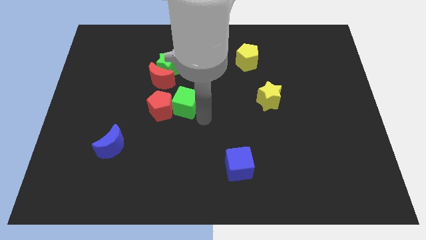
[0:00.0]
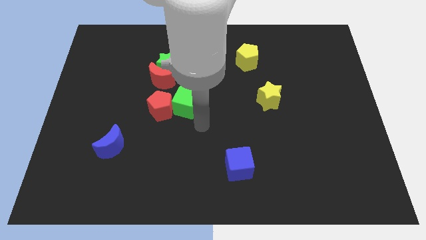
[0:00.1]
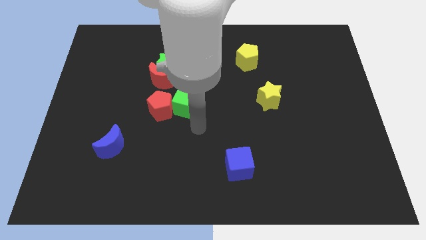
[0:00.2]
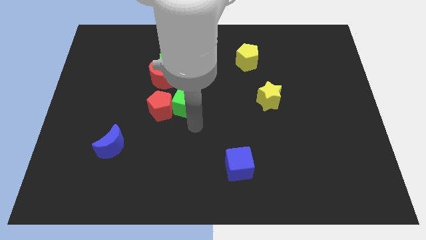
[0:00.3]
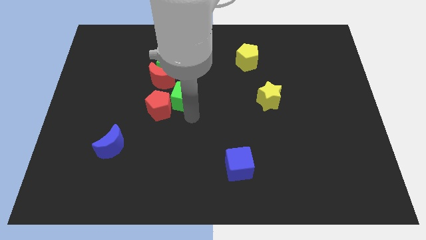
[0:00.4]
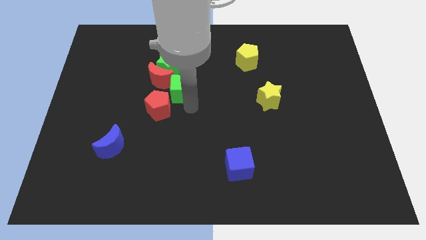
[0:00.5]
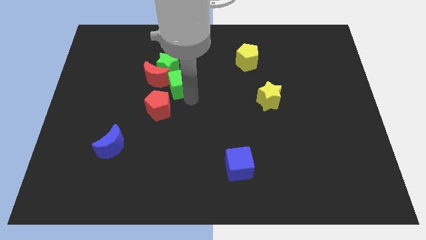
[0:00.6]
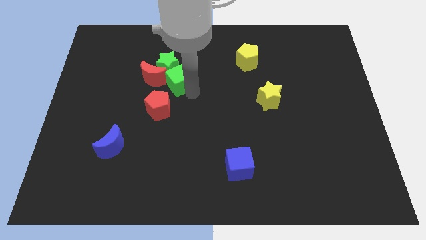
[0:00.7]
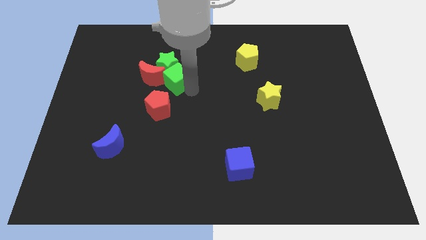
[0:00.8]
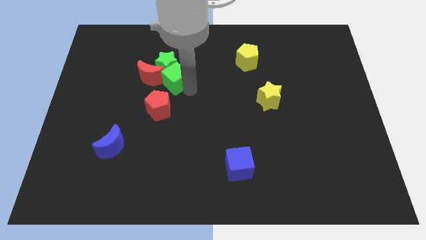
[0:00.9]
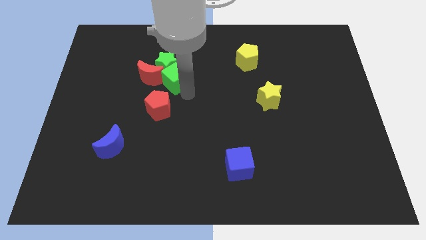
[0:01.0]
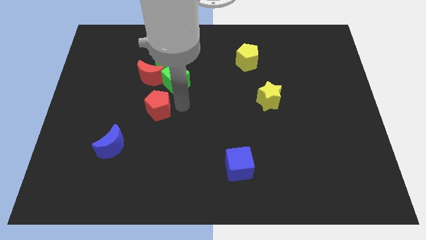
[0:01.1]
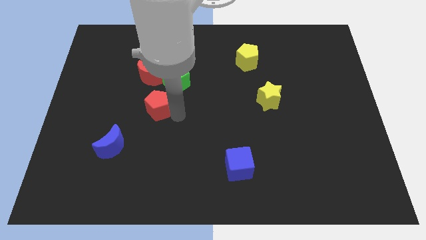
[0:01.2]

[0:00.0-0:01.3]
push the green cube into the green star

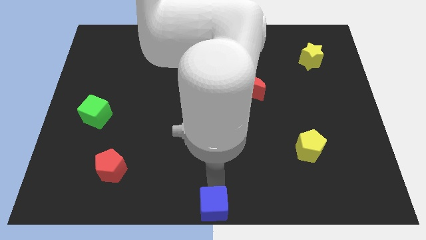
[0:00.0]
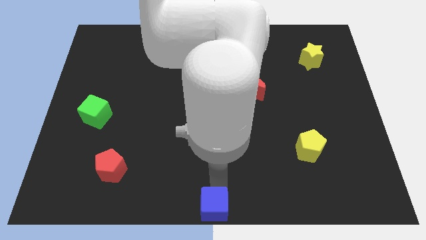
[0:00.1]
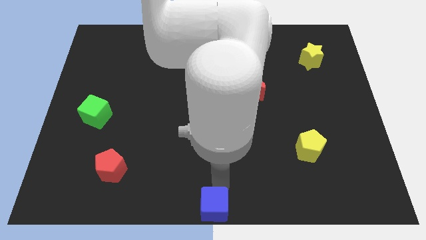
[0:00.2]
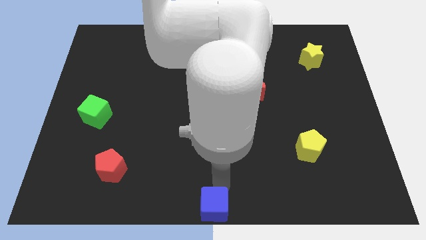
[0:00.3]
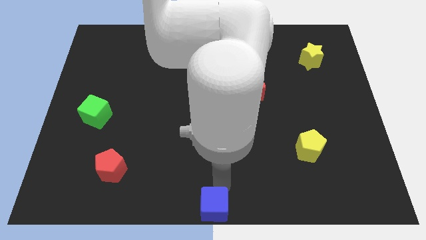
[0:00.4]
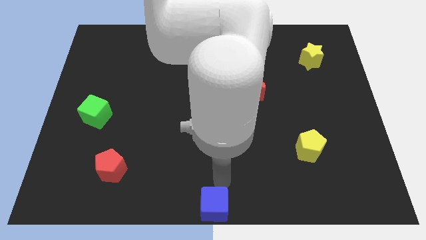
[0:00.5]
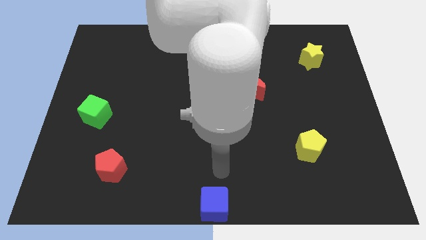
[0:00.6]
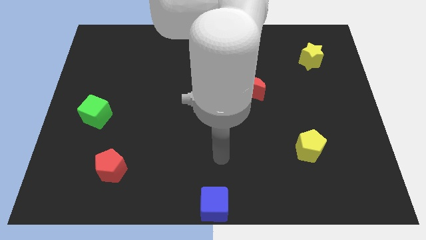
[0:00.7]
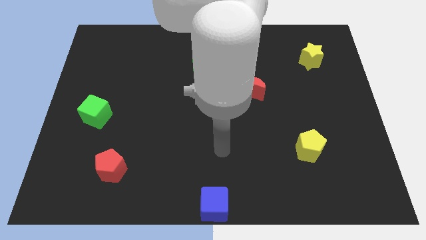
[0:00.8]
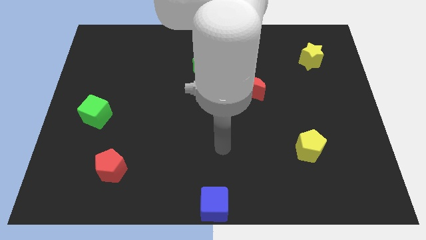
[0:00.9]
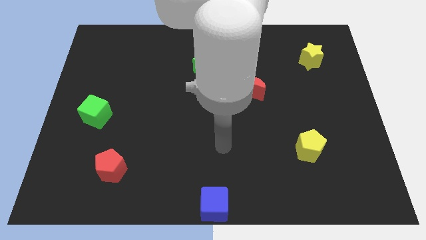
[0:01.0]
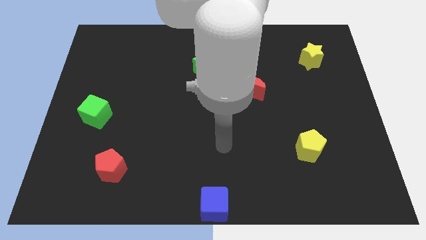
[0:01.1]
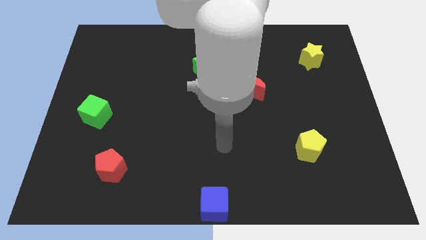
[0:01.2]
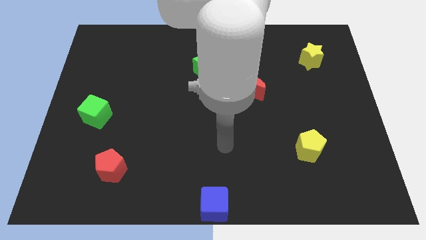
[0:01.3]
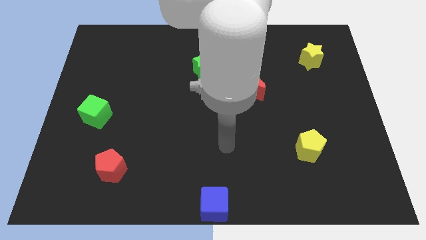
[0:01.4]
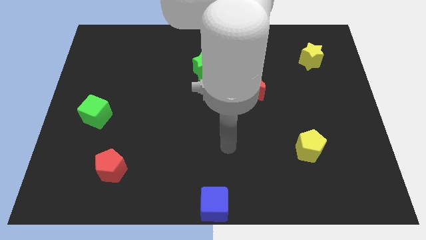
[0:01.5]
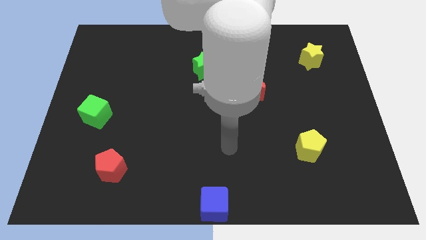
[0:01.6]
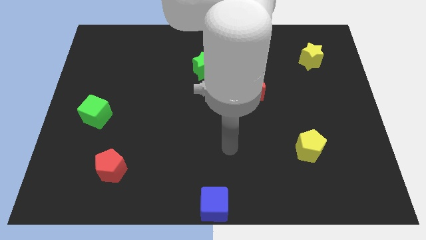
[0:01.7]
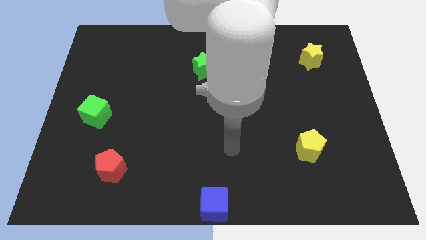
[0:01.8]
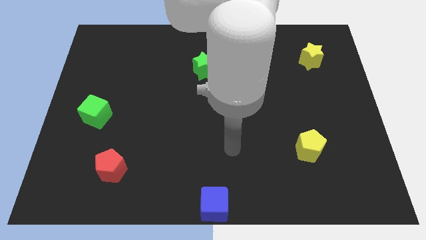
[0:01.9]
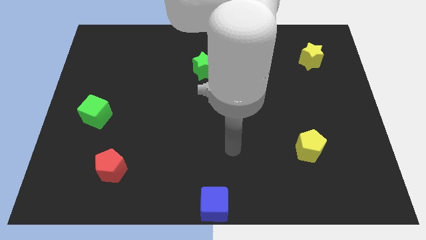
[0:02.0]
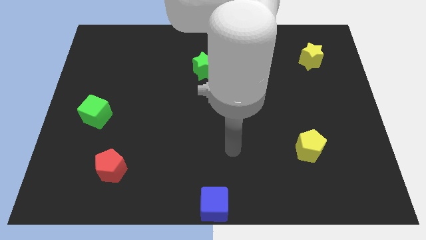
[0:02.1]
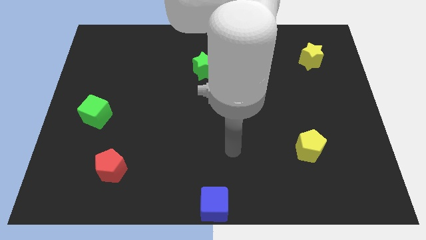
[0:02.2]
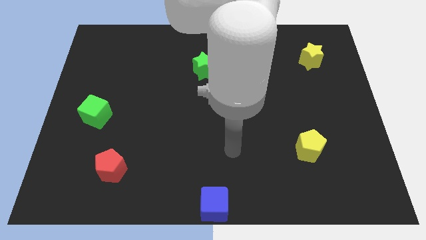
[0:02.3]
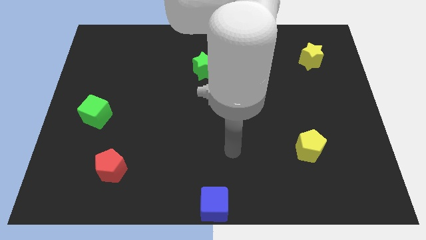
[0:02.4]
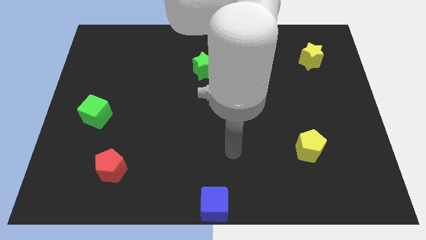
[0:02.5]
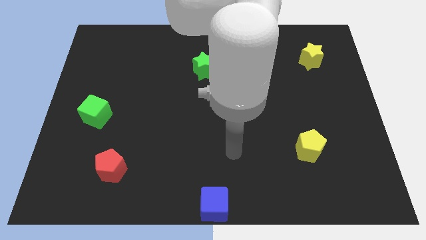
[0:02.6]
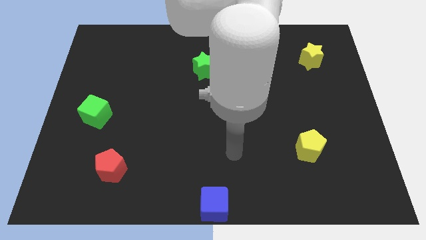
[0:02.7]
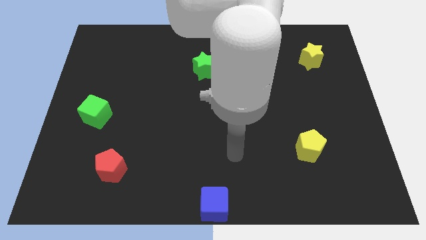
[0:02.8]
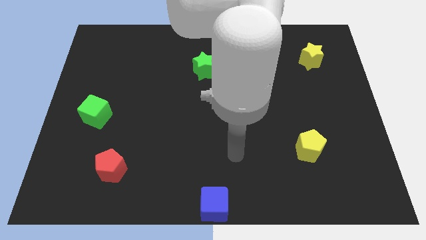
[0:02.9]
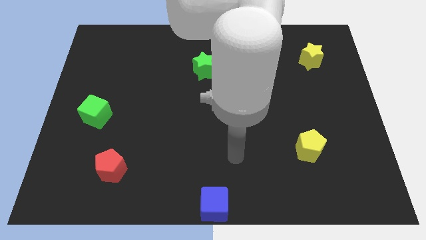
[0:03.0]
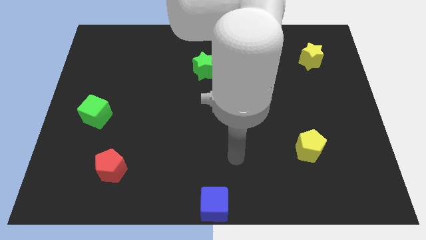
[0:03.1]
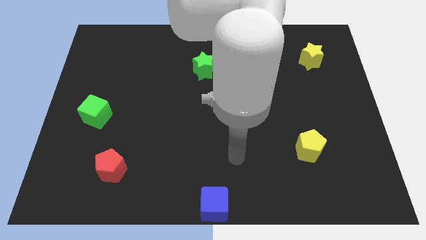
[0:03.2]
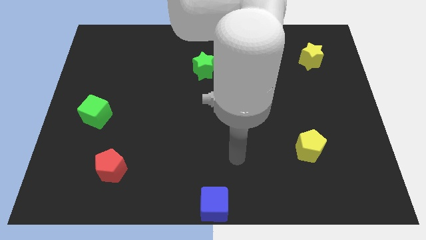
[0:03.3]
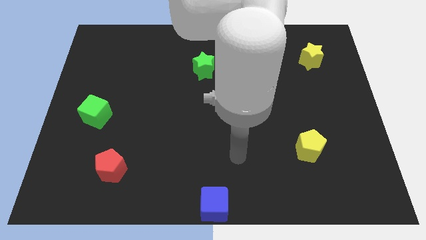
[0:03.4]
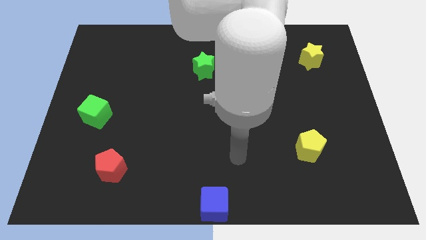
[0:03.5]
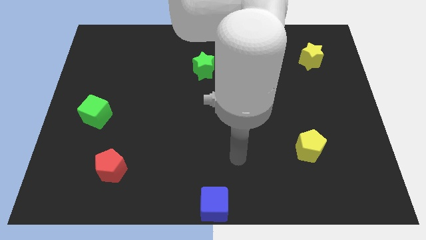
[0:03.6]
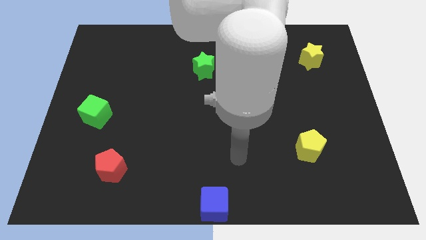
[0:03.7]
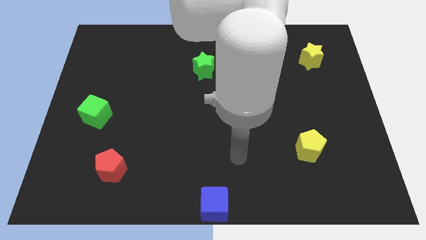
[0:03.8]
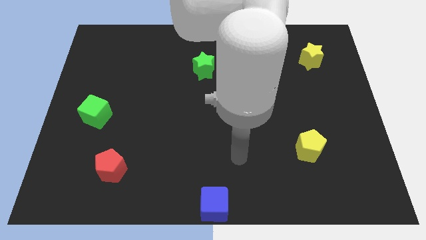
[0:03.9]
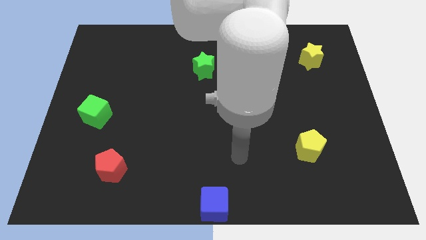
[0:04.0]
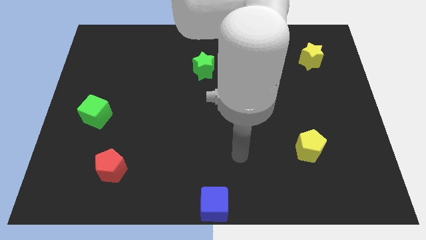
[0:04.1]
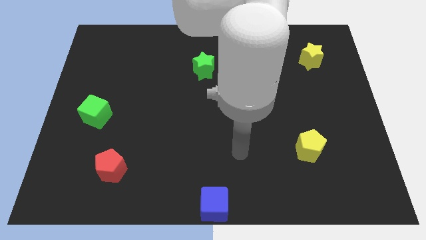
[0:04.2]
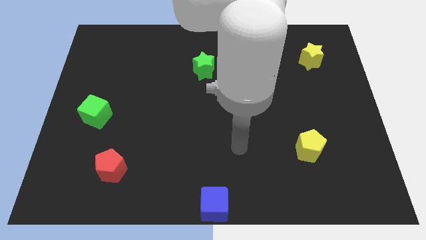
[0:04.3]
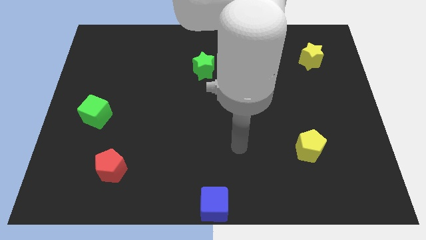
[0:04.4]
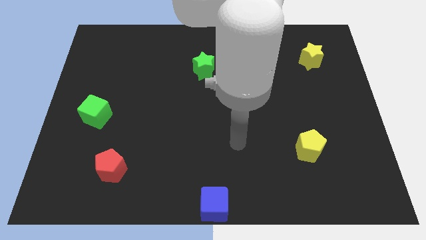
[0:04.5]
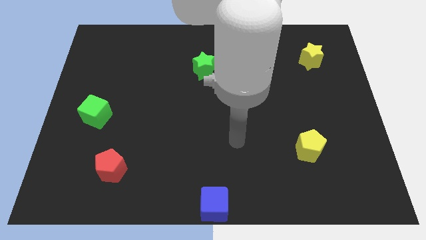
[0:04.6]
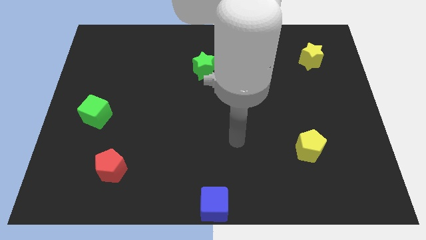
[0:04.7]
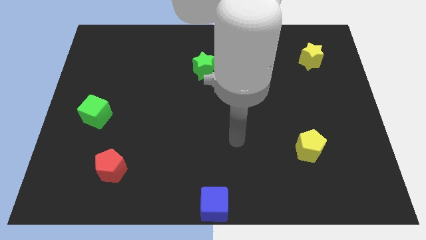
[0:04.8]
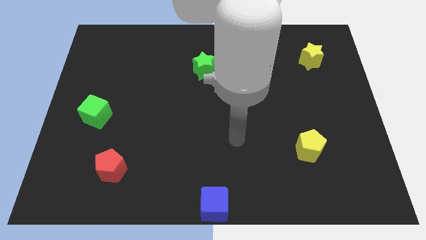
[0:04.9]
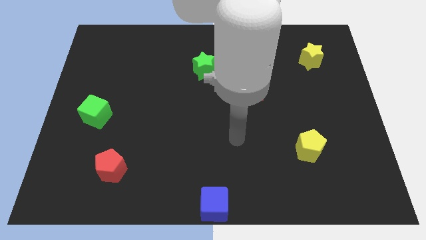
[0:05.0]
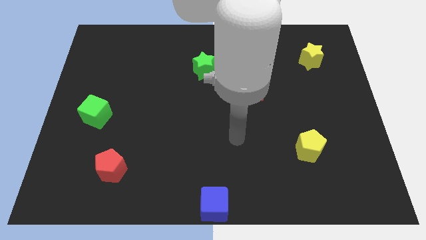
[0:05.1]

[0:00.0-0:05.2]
move your arm away from the blue cube

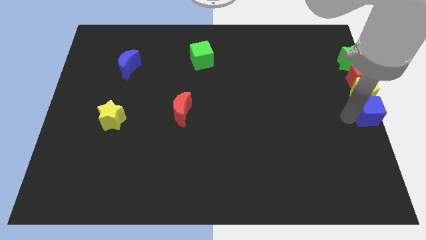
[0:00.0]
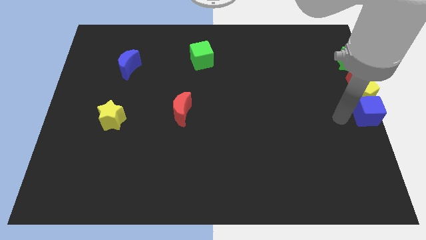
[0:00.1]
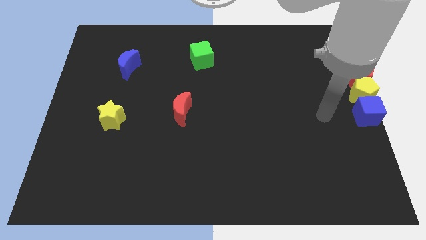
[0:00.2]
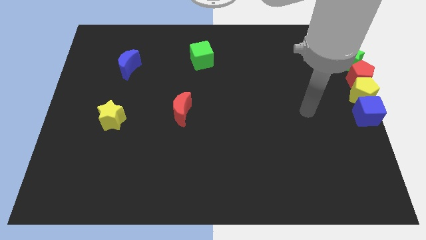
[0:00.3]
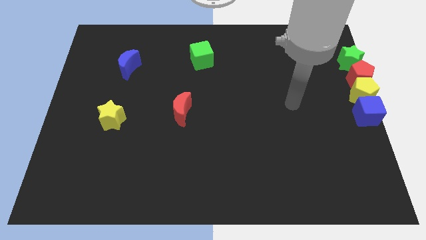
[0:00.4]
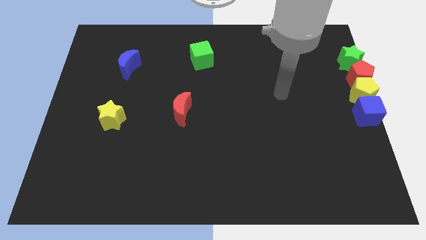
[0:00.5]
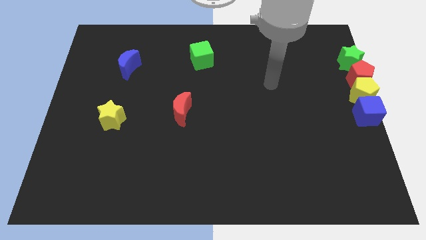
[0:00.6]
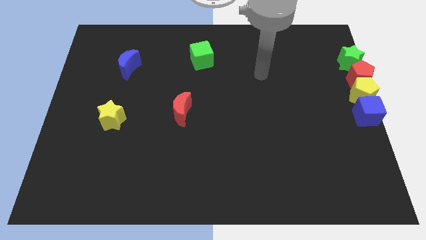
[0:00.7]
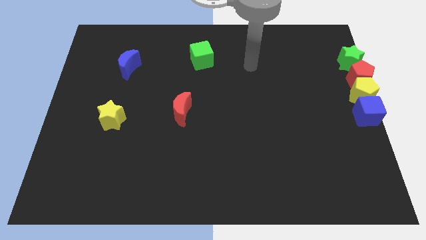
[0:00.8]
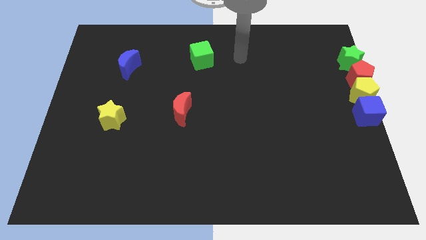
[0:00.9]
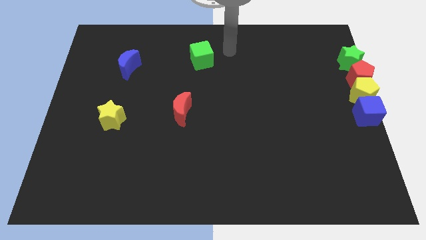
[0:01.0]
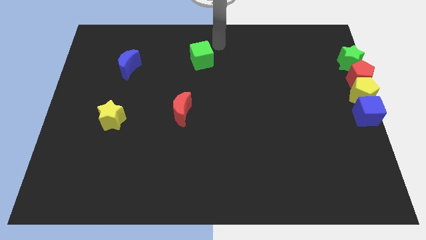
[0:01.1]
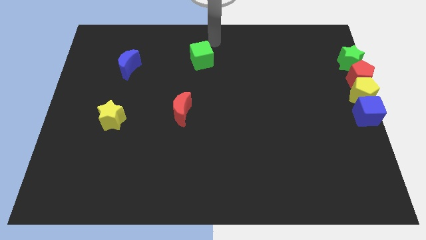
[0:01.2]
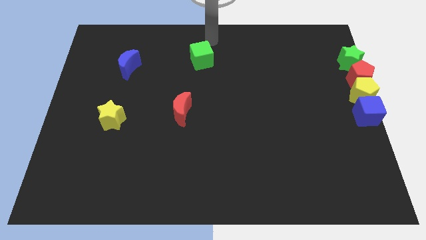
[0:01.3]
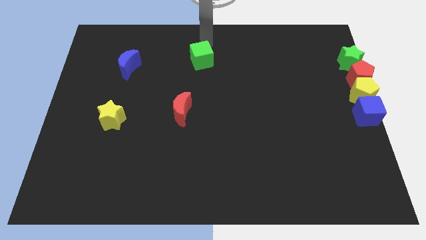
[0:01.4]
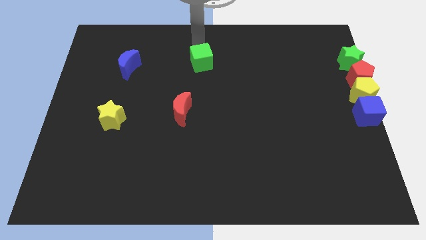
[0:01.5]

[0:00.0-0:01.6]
place the arm above the green cube

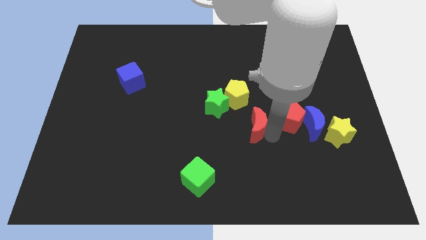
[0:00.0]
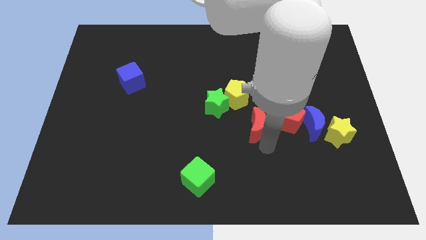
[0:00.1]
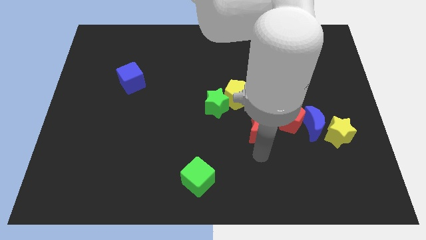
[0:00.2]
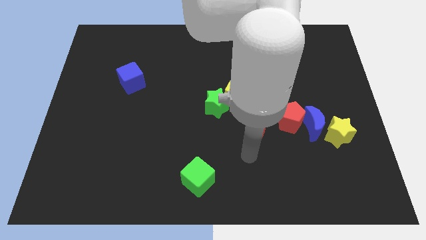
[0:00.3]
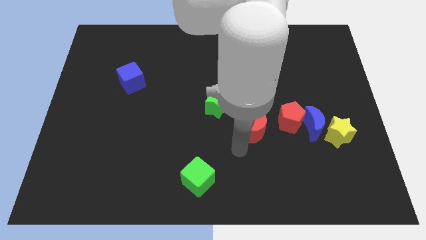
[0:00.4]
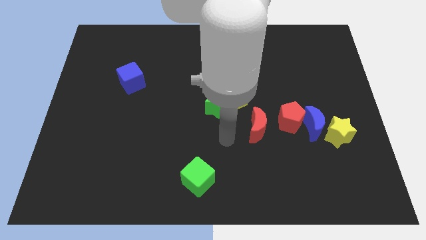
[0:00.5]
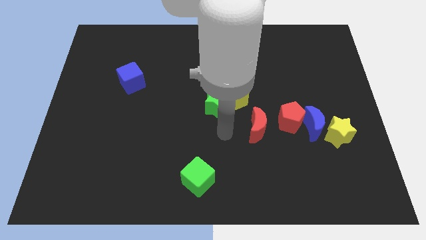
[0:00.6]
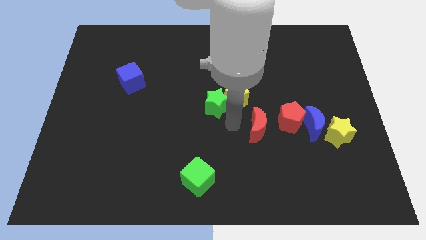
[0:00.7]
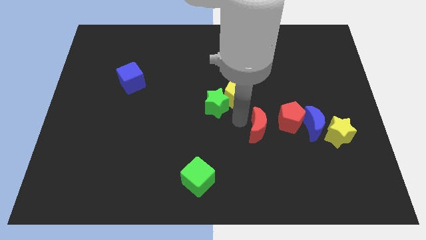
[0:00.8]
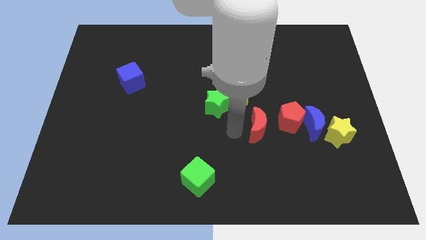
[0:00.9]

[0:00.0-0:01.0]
place your arm at the left of the red crescent
